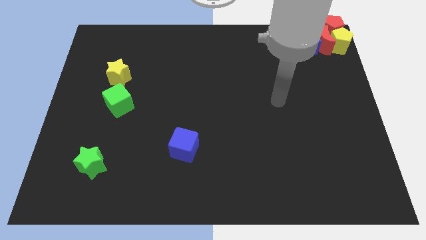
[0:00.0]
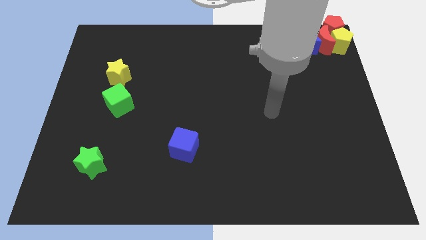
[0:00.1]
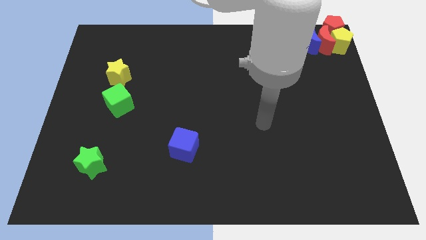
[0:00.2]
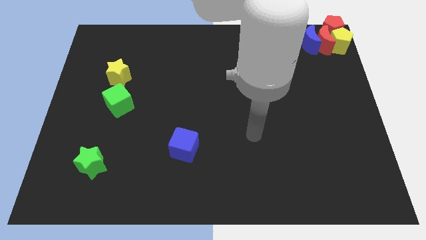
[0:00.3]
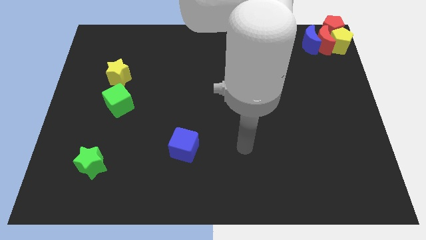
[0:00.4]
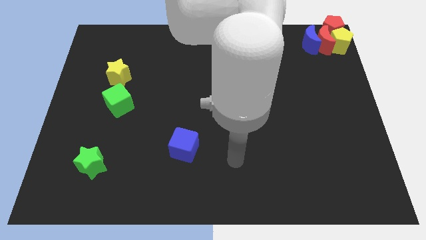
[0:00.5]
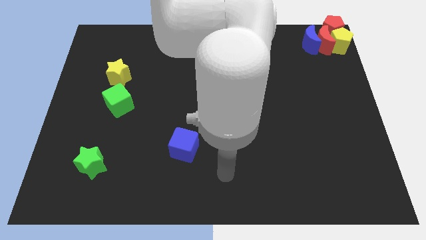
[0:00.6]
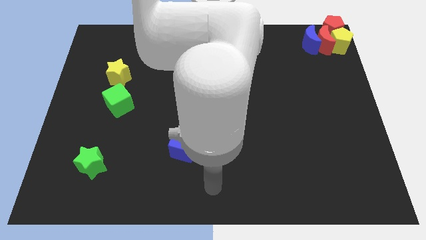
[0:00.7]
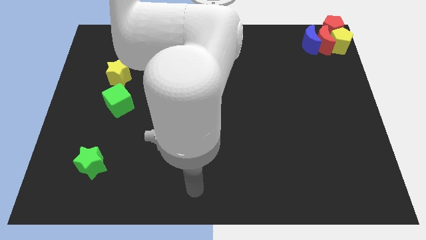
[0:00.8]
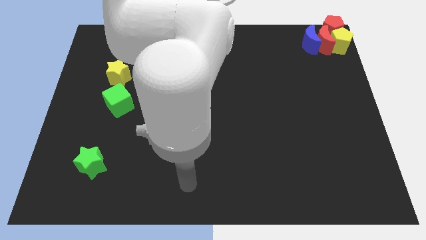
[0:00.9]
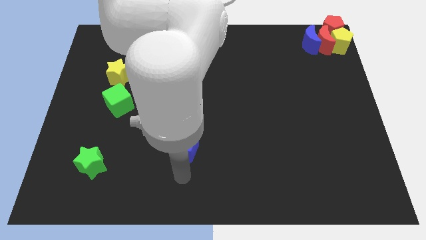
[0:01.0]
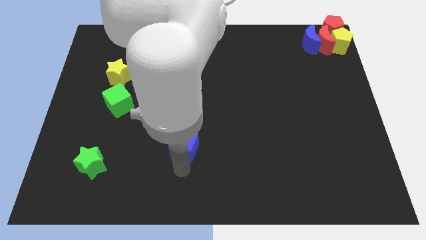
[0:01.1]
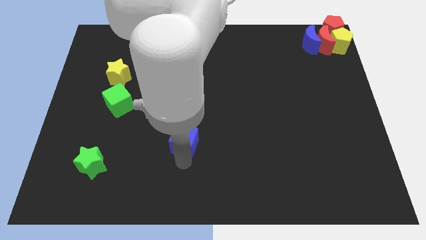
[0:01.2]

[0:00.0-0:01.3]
touch the bottom side of the blue cube

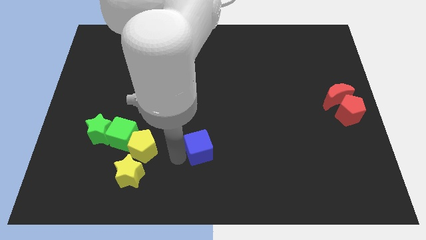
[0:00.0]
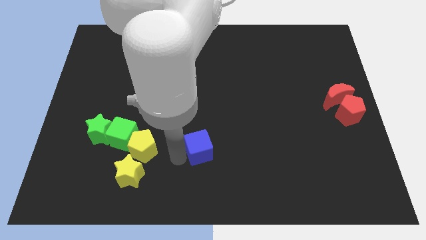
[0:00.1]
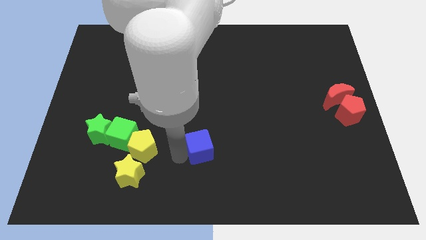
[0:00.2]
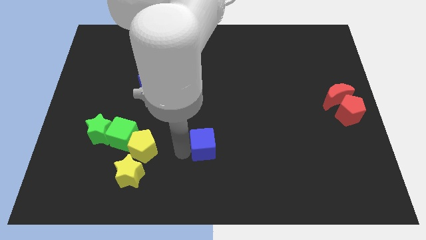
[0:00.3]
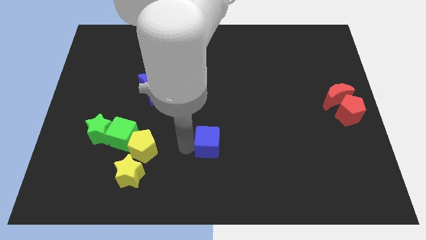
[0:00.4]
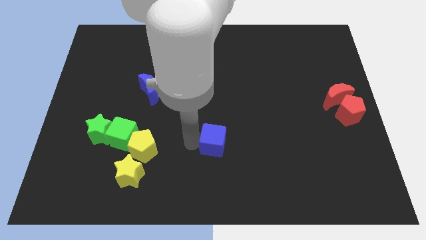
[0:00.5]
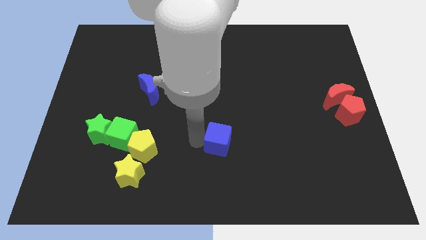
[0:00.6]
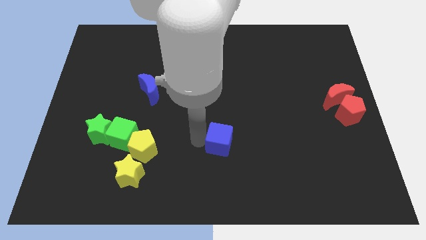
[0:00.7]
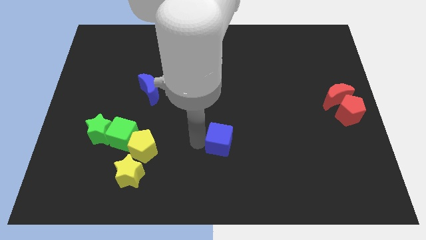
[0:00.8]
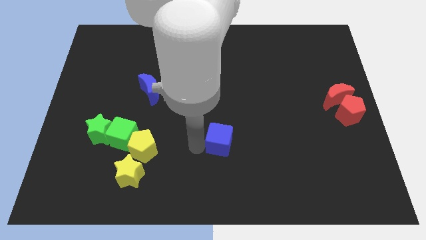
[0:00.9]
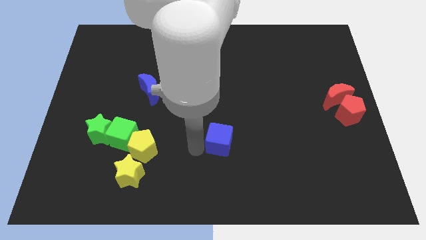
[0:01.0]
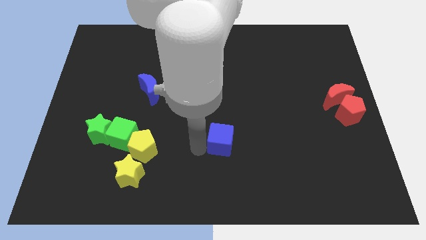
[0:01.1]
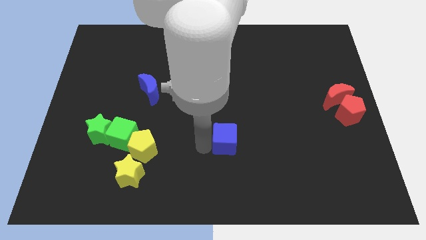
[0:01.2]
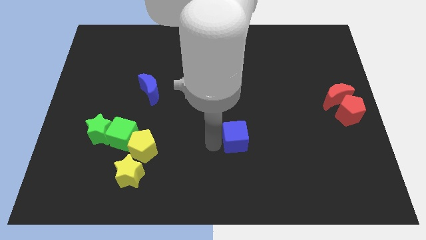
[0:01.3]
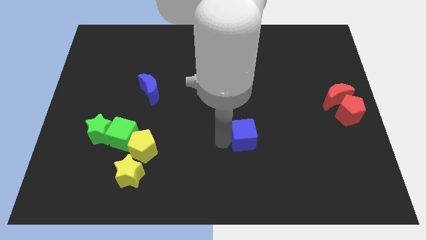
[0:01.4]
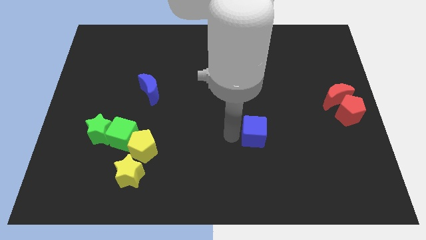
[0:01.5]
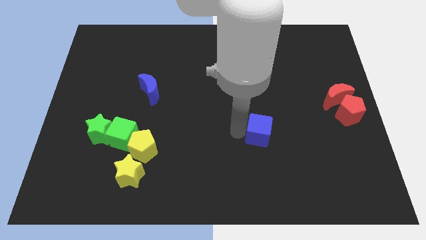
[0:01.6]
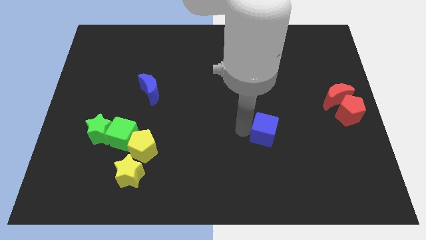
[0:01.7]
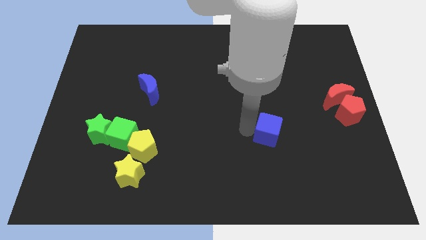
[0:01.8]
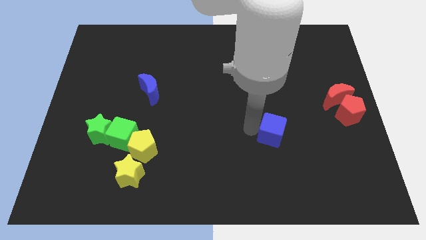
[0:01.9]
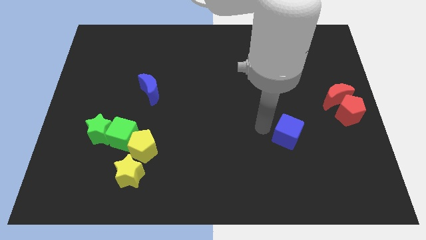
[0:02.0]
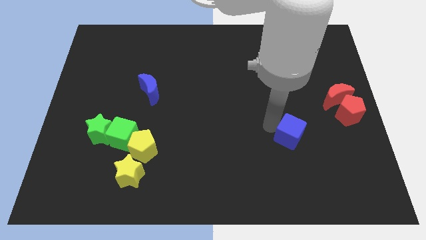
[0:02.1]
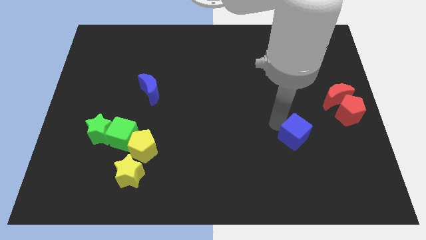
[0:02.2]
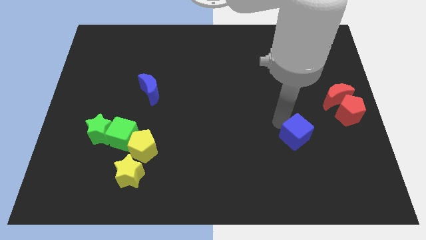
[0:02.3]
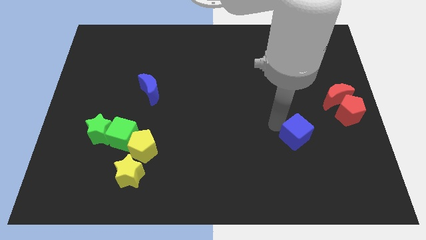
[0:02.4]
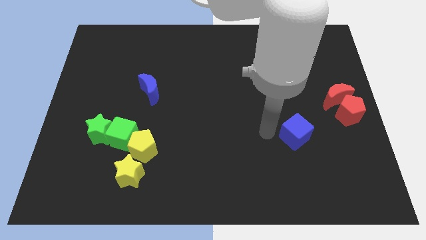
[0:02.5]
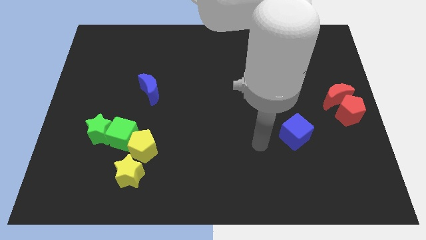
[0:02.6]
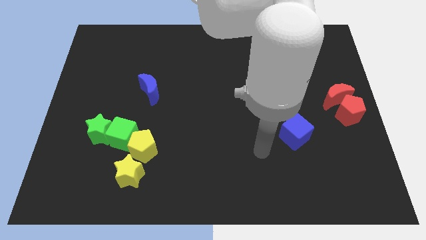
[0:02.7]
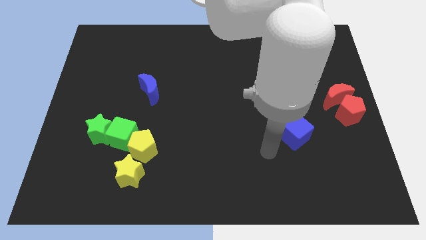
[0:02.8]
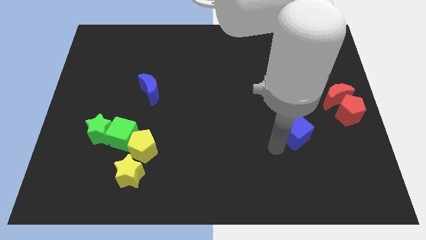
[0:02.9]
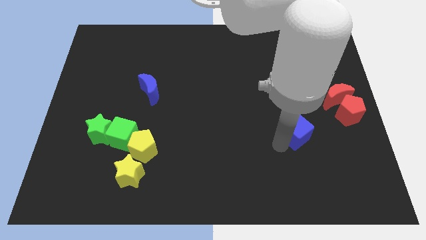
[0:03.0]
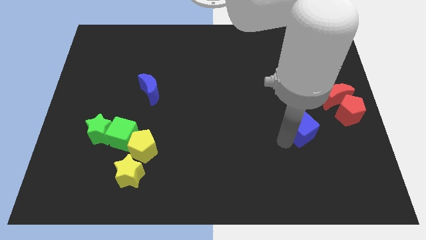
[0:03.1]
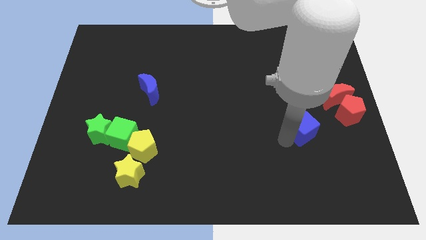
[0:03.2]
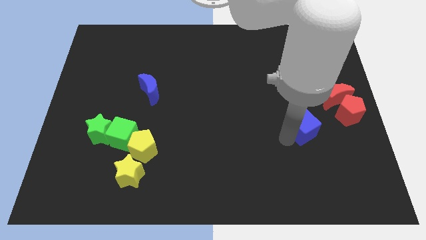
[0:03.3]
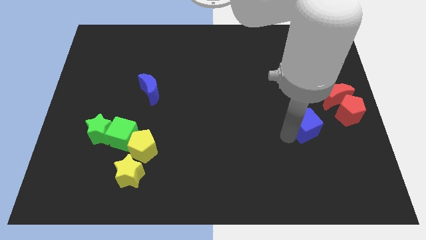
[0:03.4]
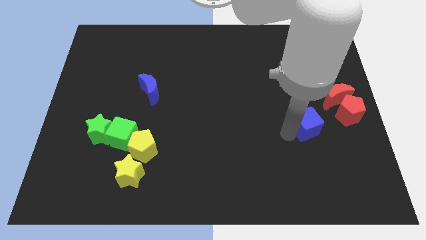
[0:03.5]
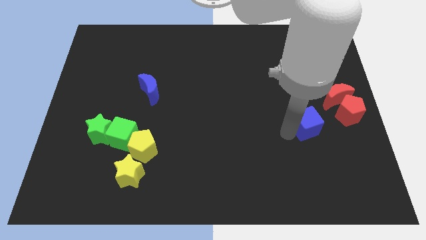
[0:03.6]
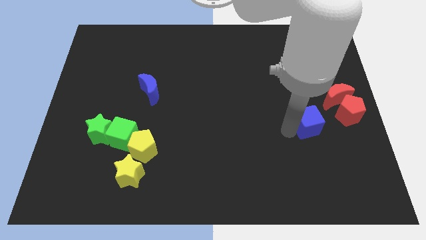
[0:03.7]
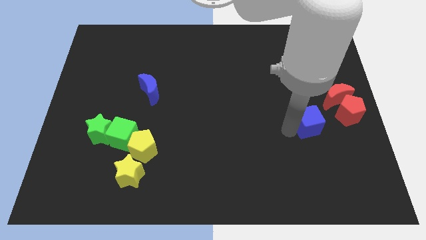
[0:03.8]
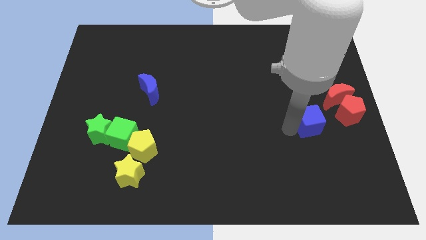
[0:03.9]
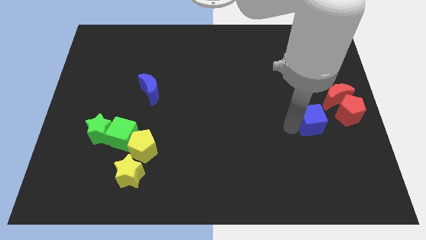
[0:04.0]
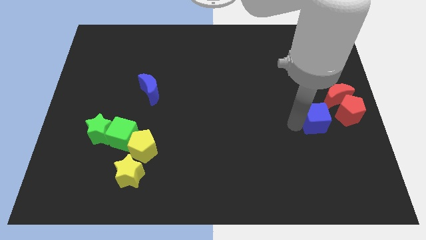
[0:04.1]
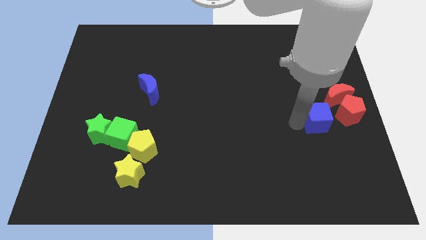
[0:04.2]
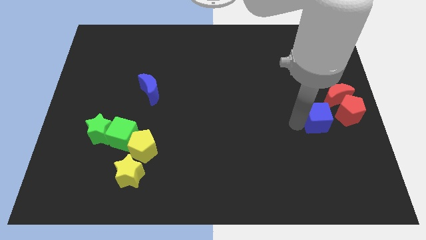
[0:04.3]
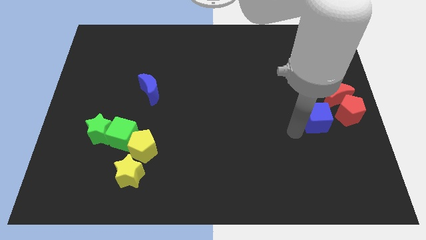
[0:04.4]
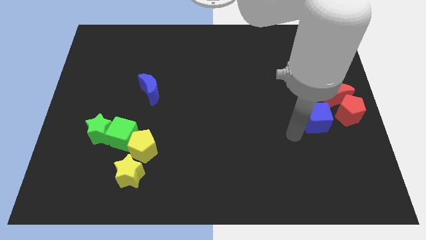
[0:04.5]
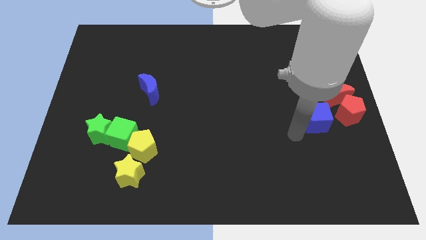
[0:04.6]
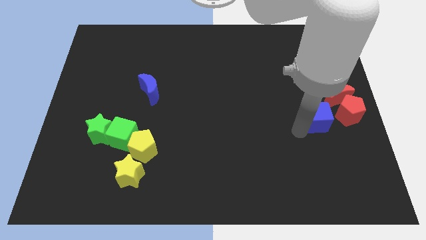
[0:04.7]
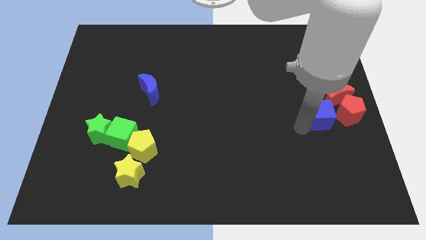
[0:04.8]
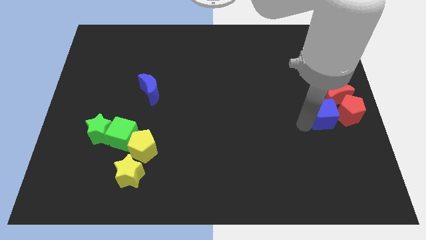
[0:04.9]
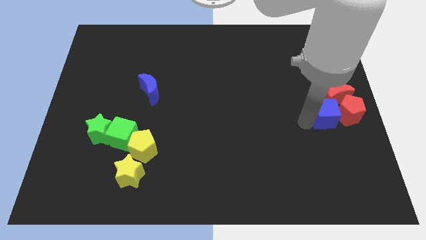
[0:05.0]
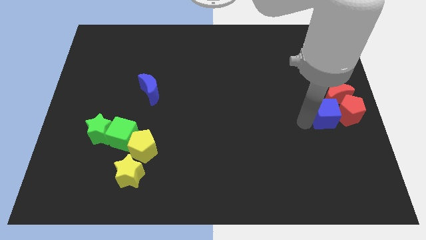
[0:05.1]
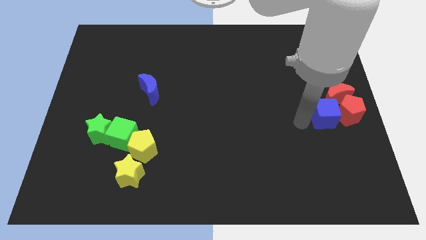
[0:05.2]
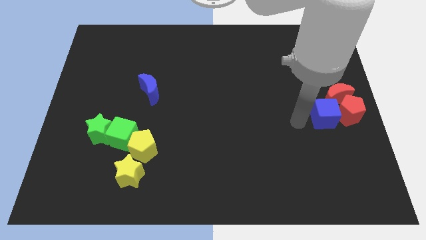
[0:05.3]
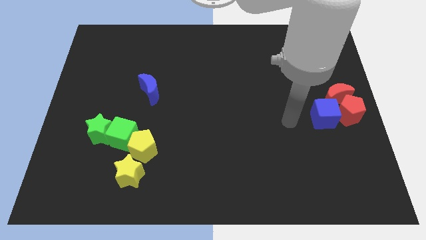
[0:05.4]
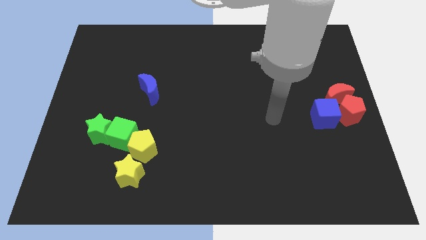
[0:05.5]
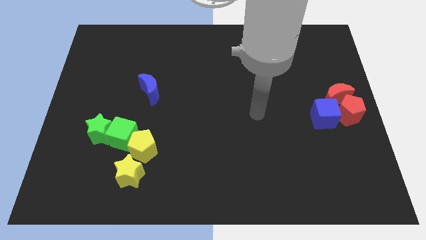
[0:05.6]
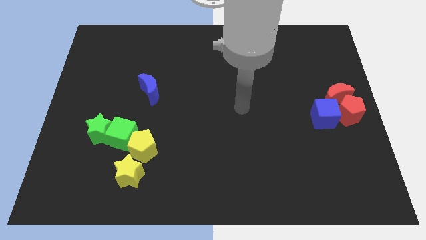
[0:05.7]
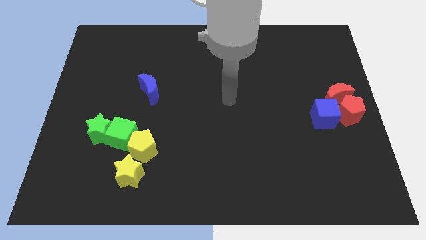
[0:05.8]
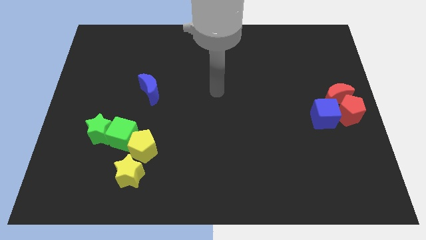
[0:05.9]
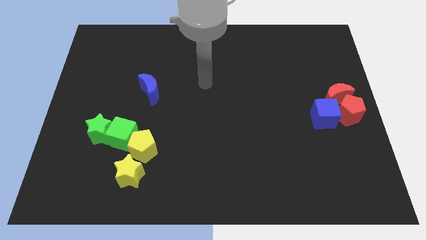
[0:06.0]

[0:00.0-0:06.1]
move the blue cube to the left of the red pentagon

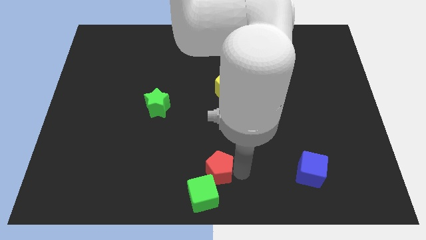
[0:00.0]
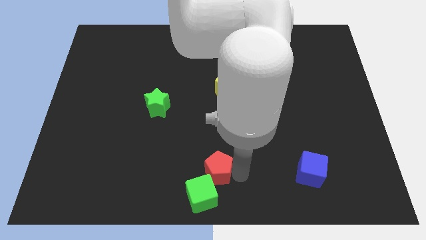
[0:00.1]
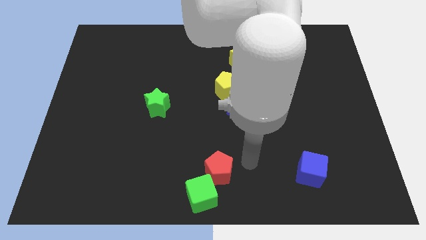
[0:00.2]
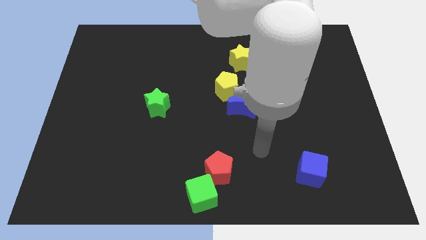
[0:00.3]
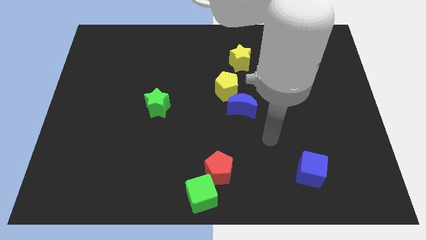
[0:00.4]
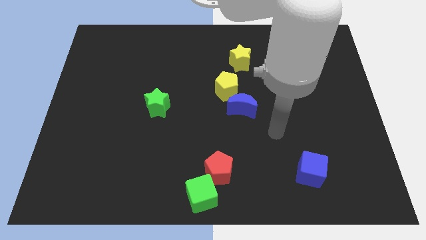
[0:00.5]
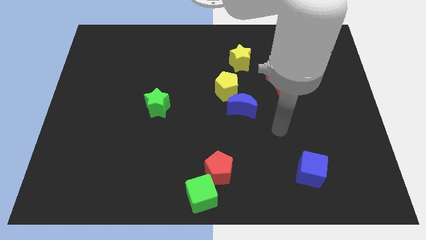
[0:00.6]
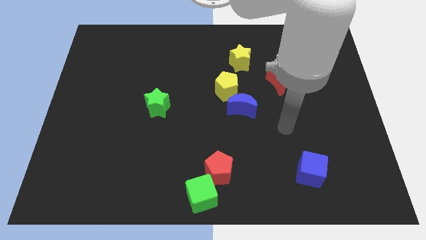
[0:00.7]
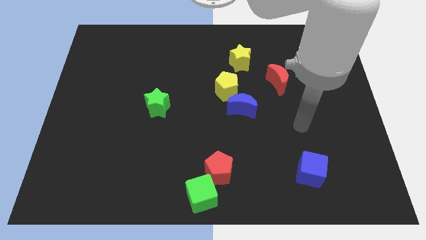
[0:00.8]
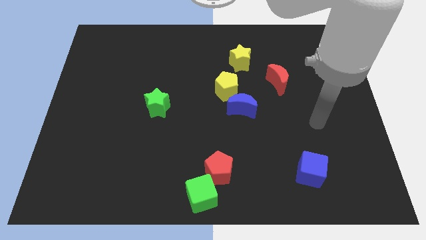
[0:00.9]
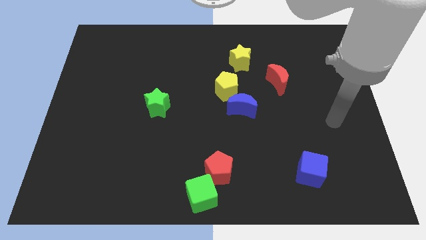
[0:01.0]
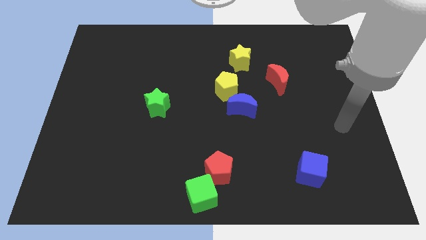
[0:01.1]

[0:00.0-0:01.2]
move your arm away from the red pentagon

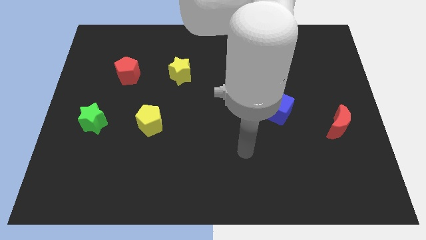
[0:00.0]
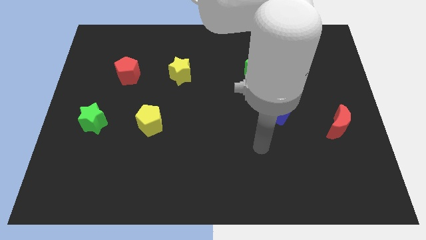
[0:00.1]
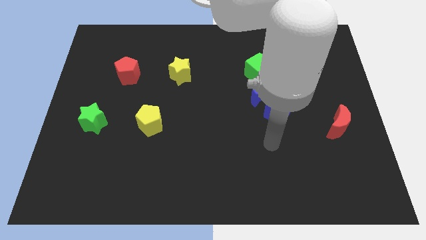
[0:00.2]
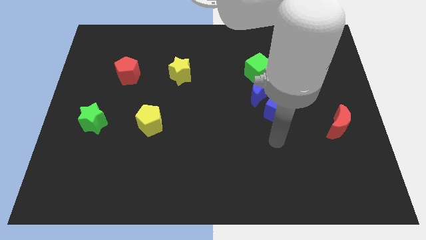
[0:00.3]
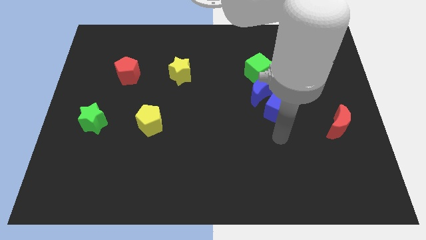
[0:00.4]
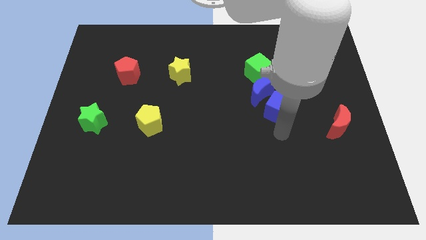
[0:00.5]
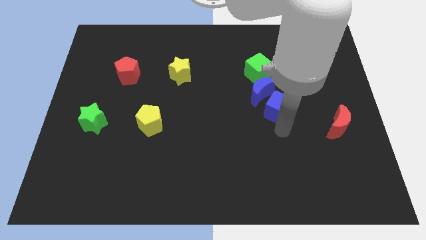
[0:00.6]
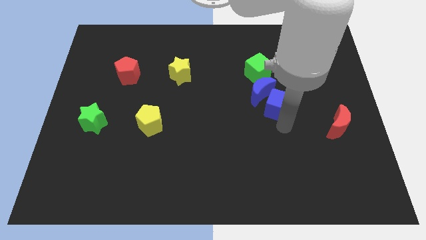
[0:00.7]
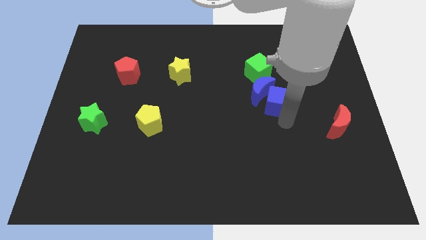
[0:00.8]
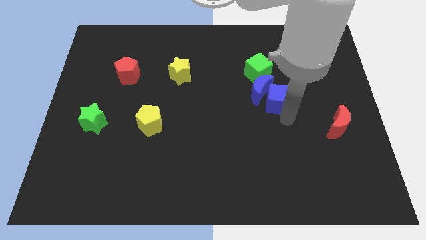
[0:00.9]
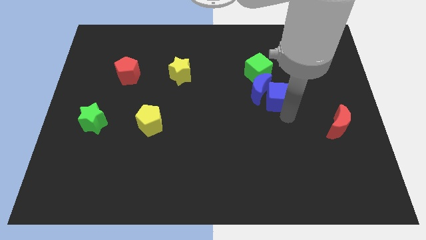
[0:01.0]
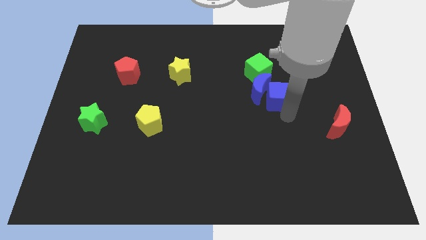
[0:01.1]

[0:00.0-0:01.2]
push the blue cube into the blue crescent
